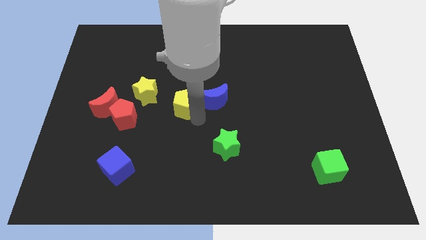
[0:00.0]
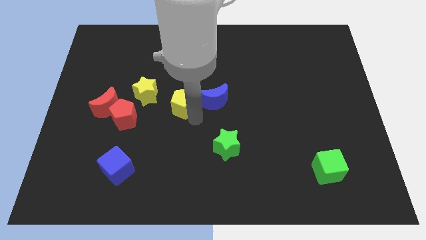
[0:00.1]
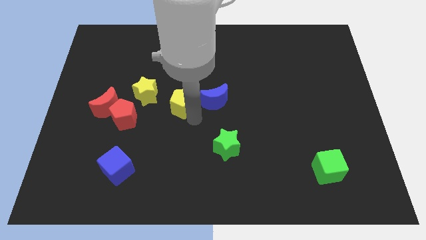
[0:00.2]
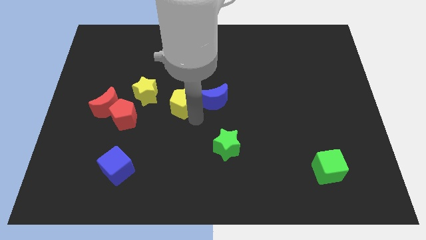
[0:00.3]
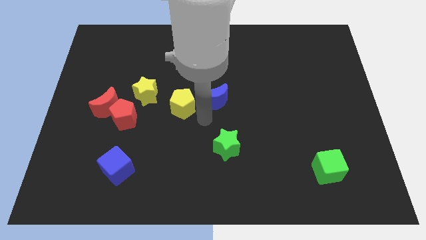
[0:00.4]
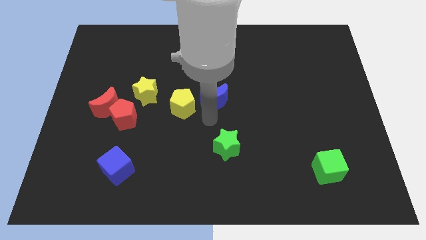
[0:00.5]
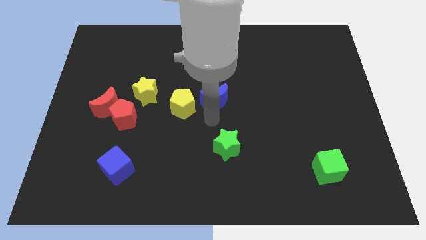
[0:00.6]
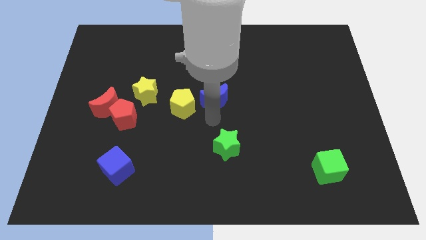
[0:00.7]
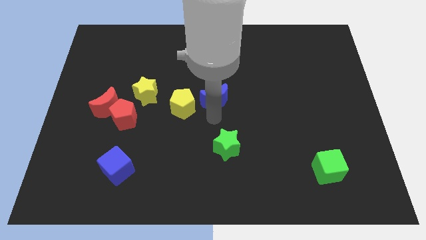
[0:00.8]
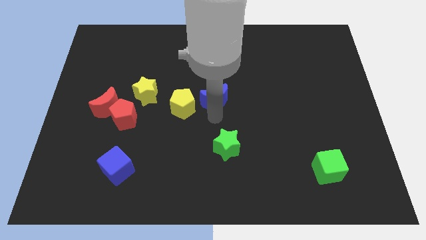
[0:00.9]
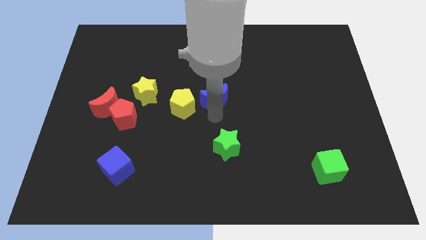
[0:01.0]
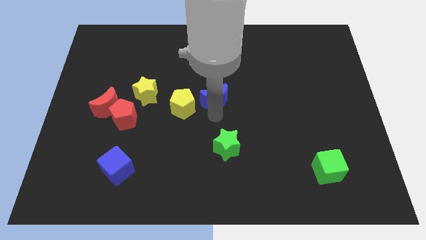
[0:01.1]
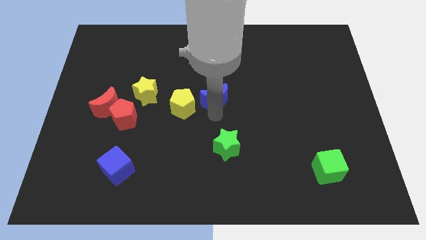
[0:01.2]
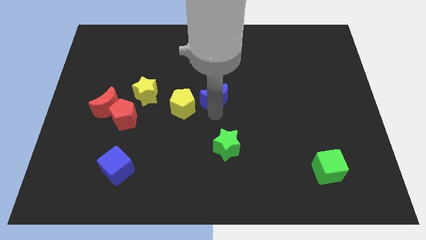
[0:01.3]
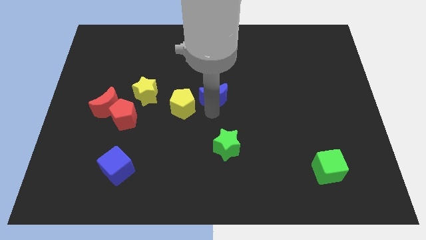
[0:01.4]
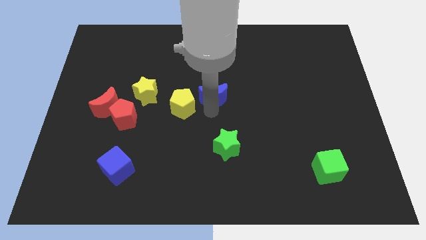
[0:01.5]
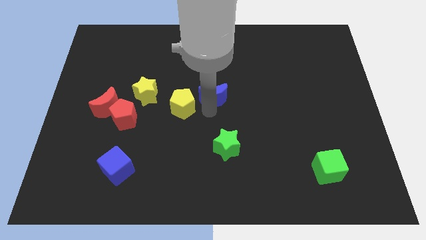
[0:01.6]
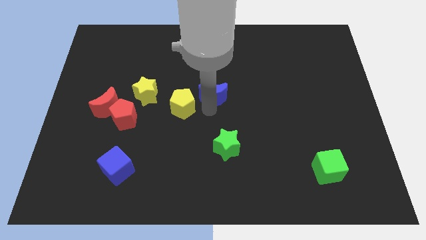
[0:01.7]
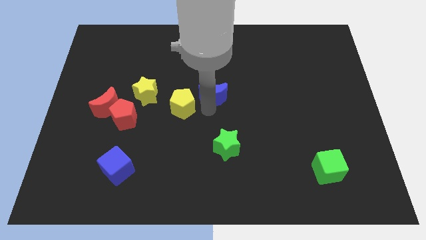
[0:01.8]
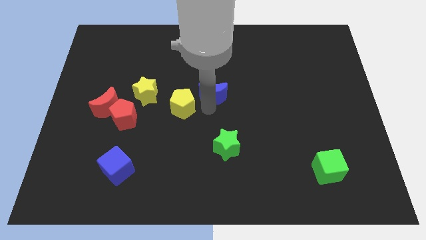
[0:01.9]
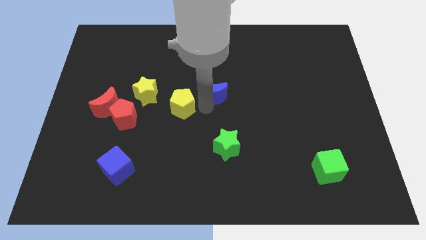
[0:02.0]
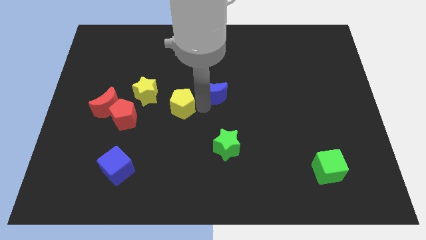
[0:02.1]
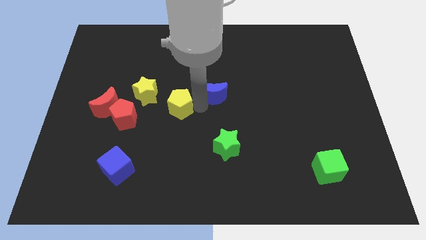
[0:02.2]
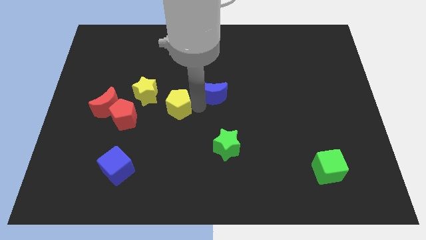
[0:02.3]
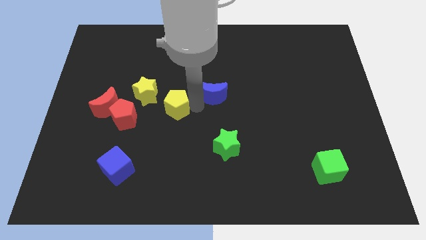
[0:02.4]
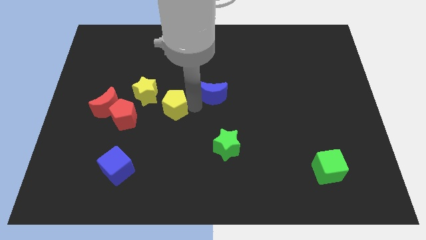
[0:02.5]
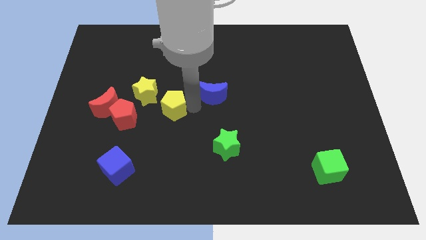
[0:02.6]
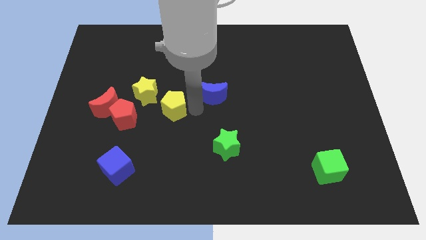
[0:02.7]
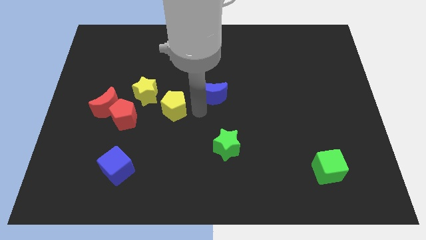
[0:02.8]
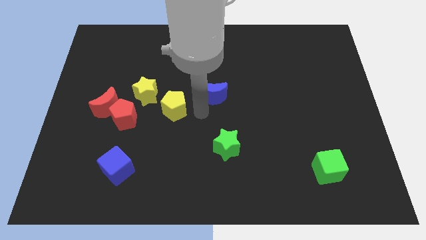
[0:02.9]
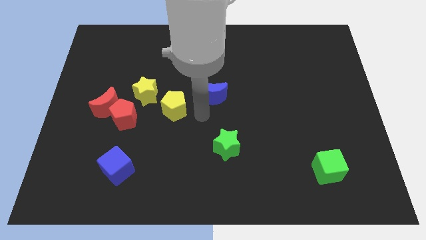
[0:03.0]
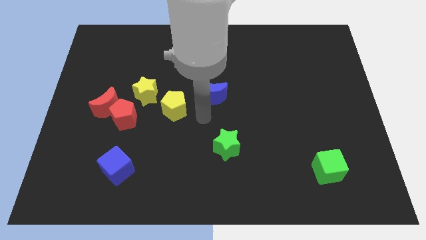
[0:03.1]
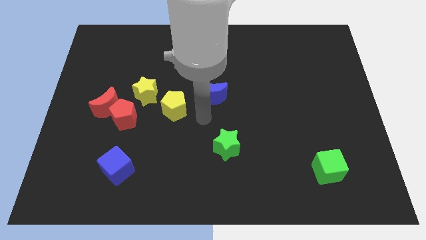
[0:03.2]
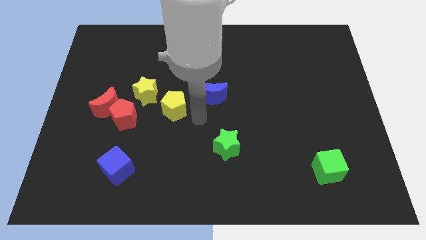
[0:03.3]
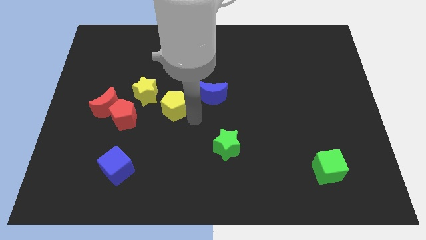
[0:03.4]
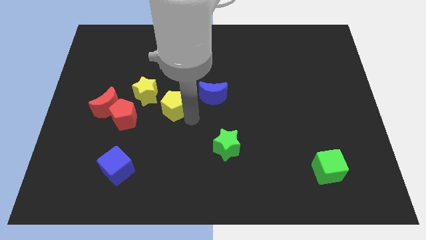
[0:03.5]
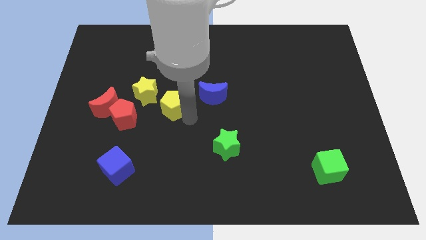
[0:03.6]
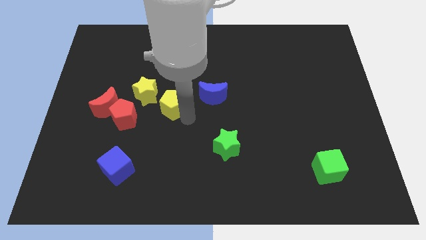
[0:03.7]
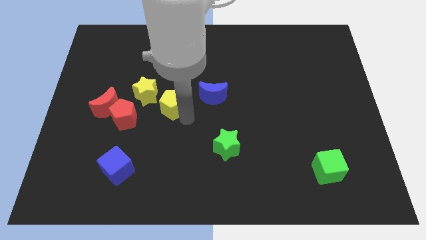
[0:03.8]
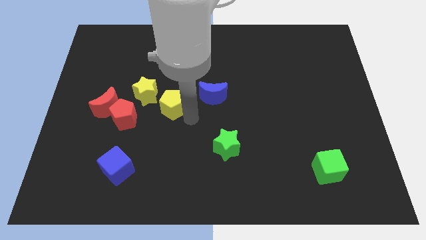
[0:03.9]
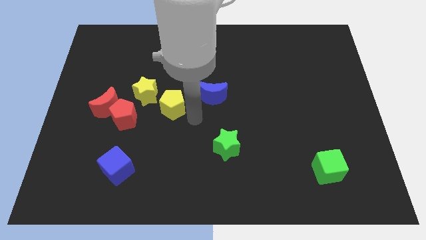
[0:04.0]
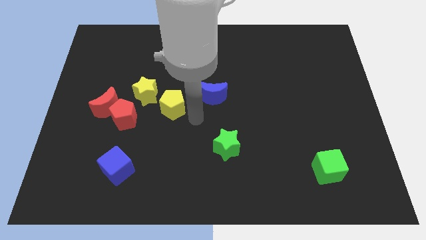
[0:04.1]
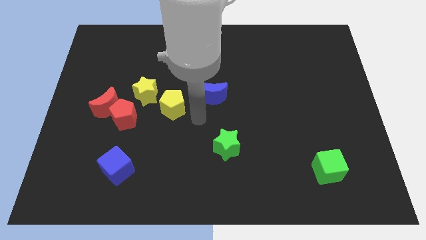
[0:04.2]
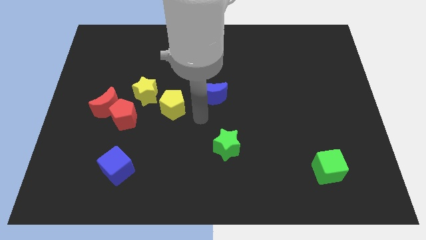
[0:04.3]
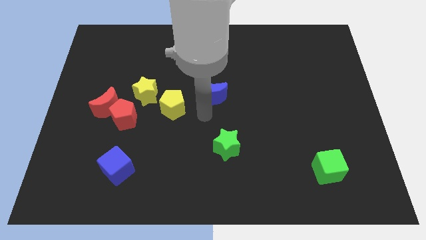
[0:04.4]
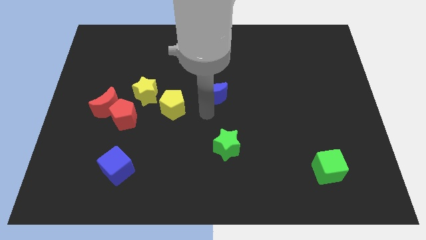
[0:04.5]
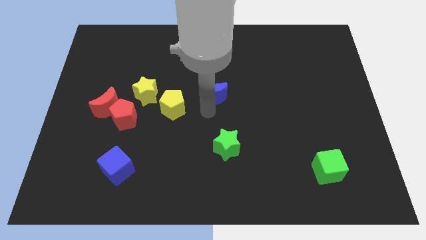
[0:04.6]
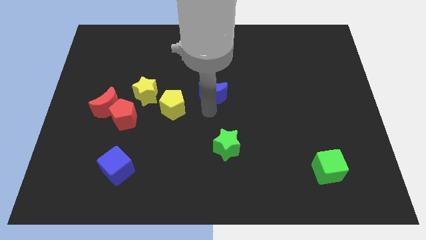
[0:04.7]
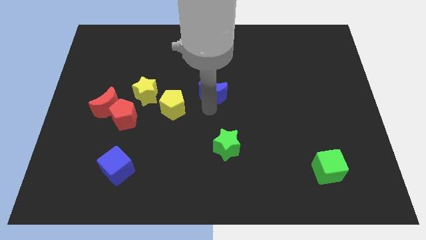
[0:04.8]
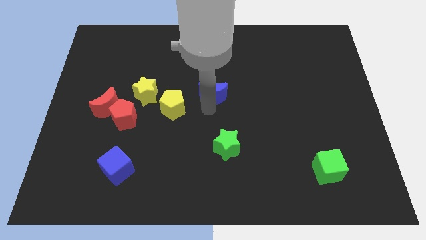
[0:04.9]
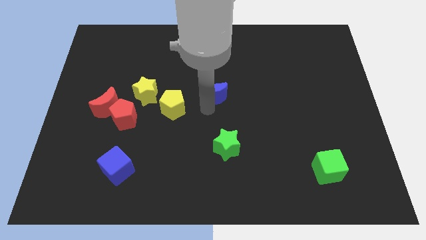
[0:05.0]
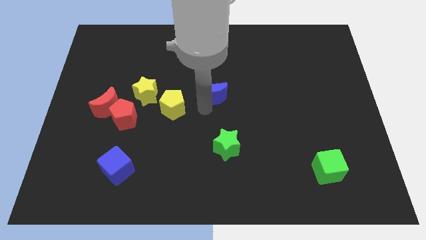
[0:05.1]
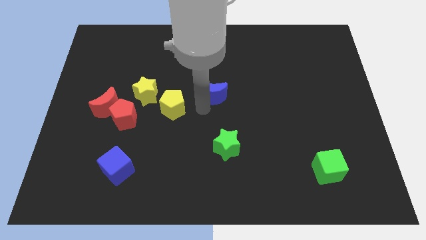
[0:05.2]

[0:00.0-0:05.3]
place the yellow pentagon to the right of the yellow star

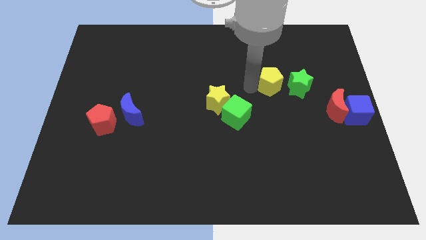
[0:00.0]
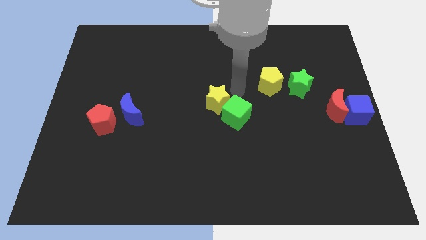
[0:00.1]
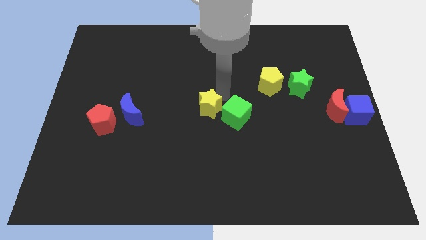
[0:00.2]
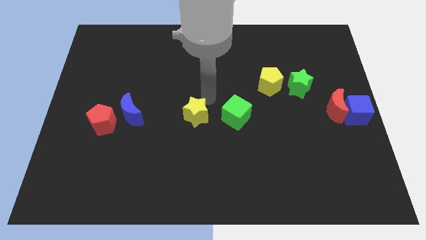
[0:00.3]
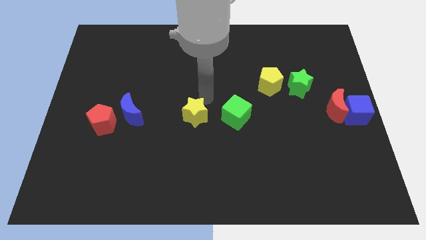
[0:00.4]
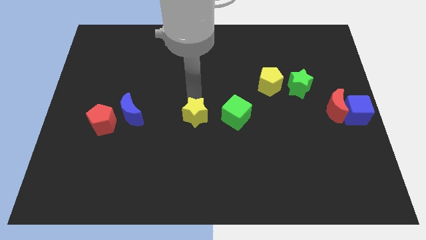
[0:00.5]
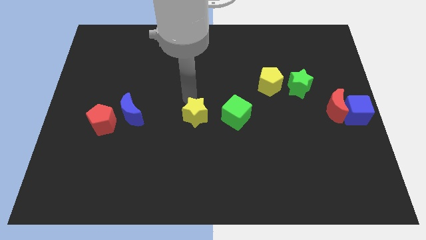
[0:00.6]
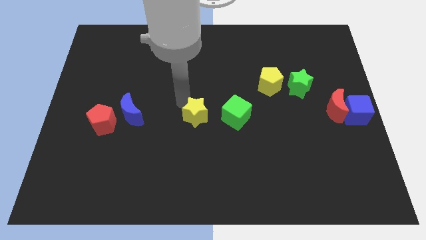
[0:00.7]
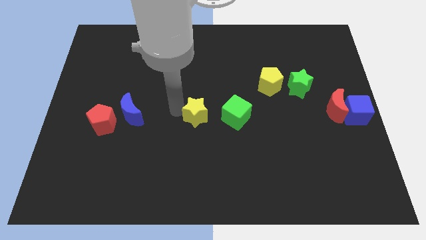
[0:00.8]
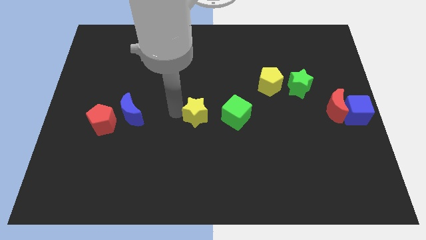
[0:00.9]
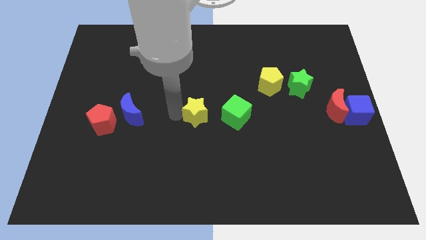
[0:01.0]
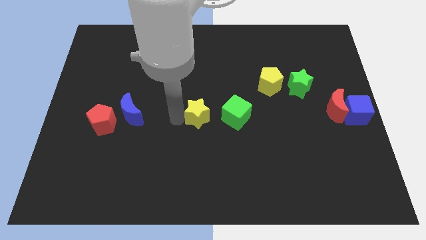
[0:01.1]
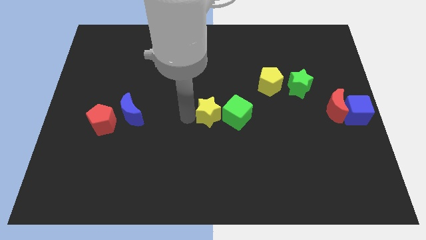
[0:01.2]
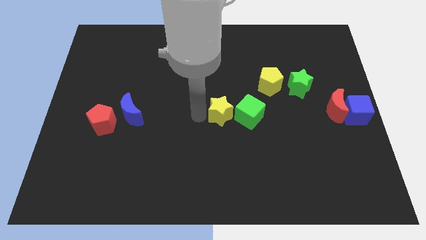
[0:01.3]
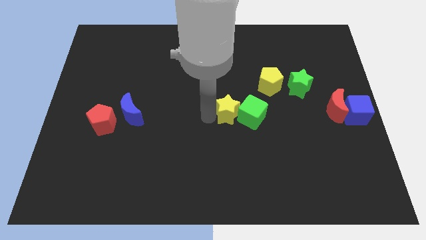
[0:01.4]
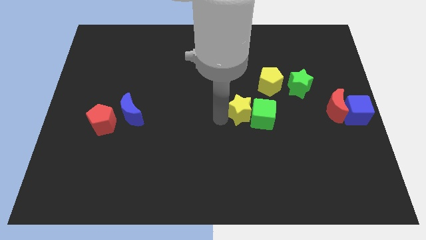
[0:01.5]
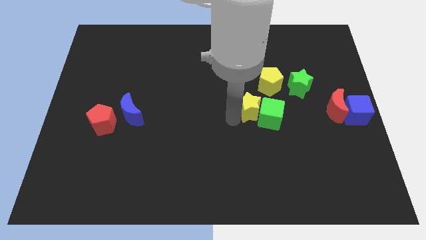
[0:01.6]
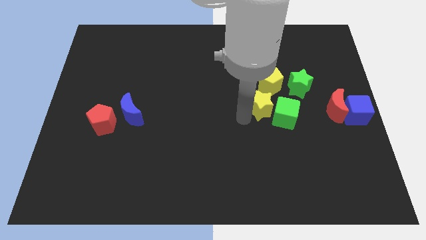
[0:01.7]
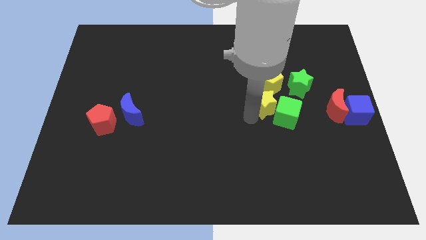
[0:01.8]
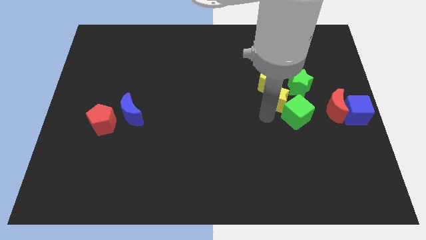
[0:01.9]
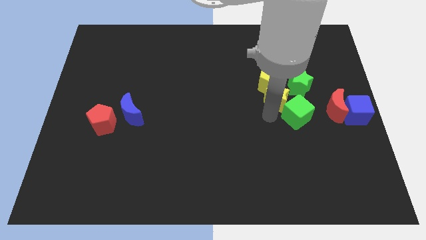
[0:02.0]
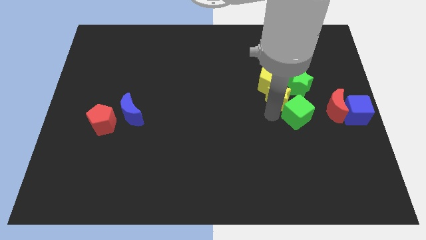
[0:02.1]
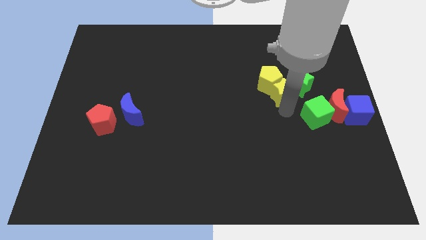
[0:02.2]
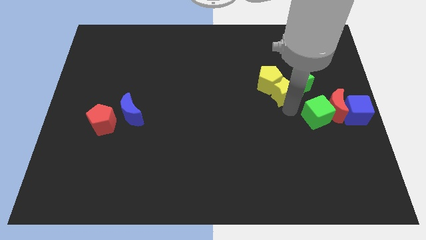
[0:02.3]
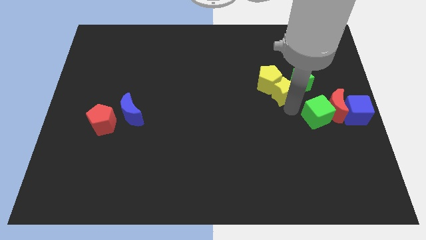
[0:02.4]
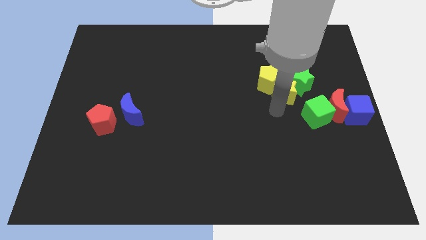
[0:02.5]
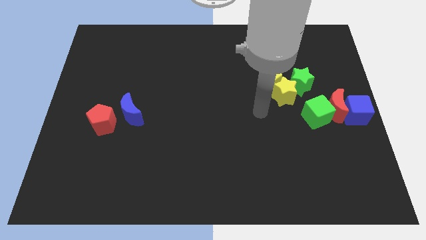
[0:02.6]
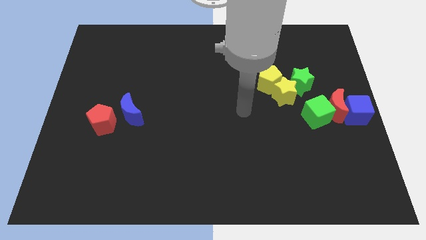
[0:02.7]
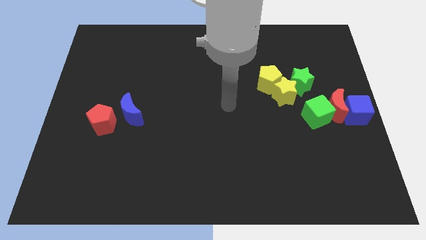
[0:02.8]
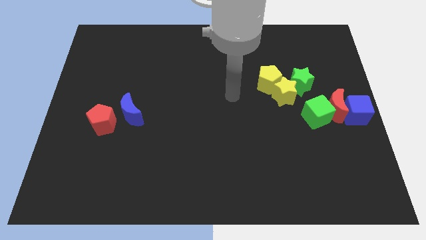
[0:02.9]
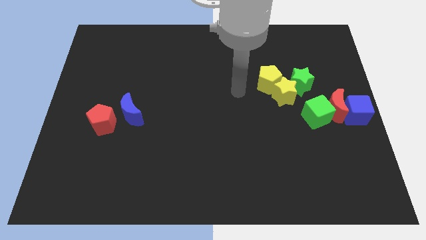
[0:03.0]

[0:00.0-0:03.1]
push the yellow star into the green cube

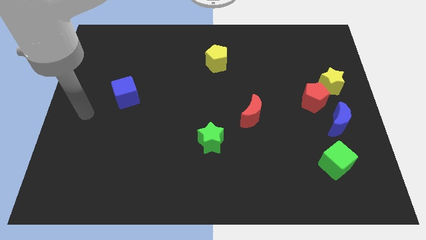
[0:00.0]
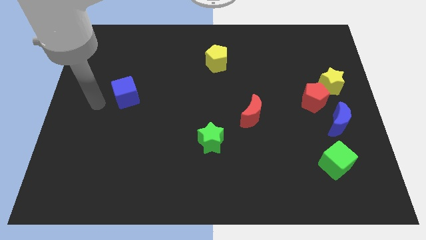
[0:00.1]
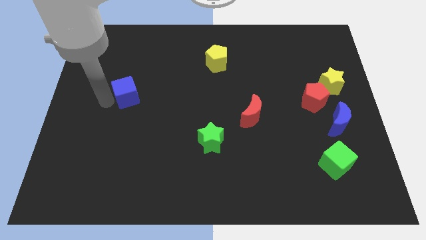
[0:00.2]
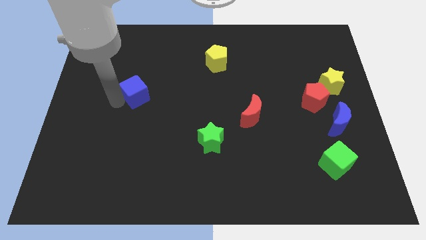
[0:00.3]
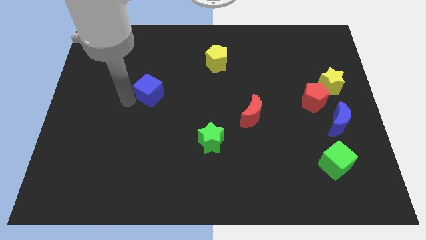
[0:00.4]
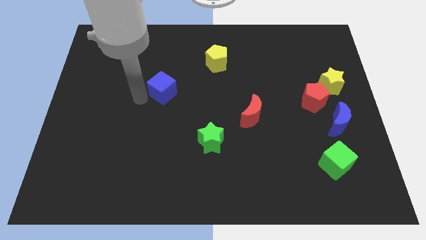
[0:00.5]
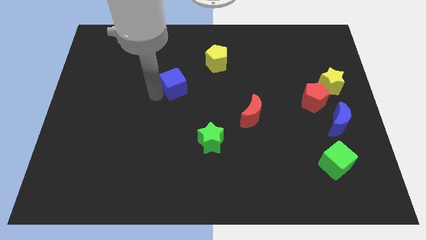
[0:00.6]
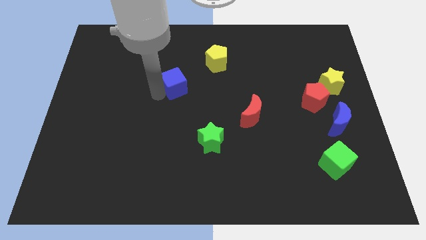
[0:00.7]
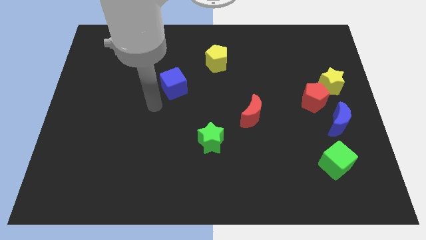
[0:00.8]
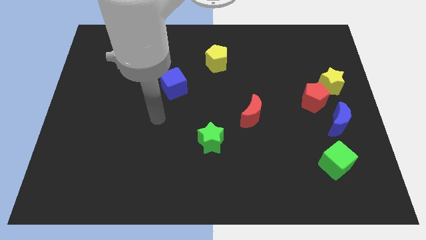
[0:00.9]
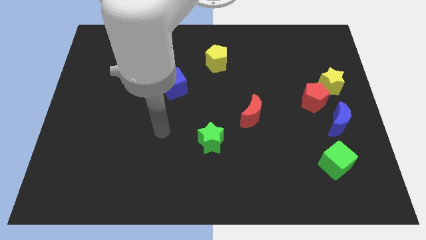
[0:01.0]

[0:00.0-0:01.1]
put the blue cube diagonally to the yellow pentagon
